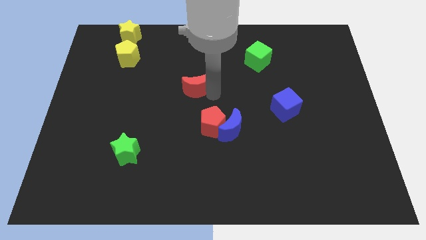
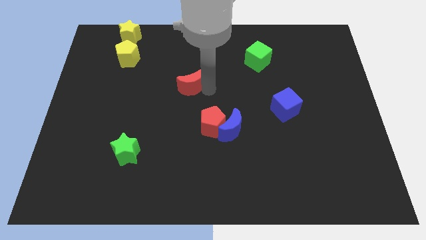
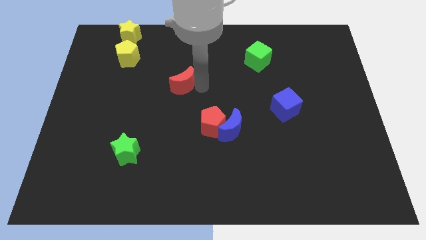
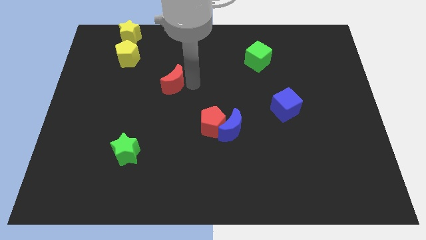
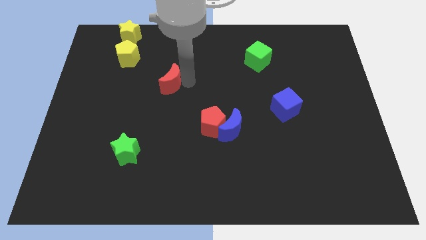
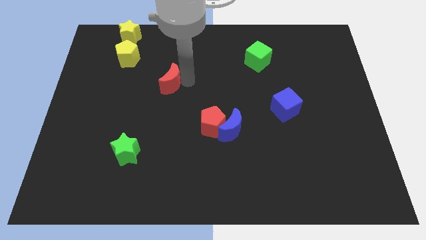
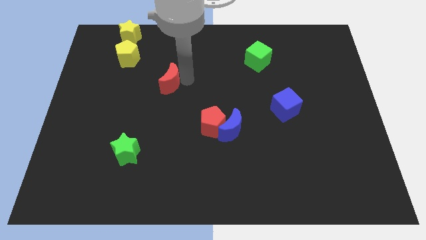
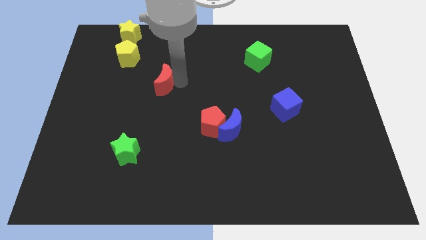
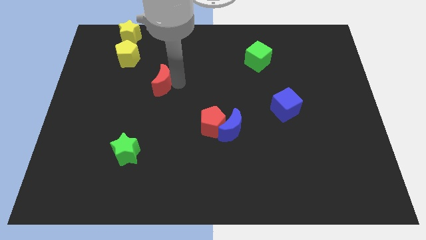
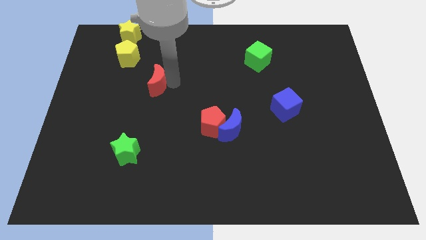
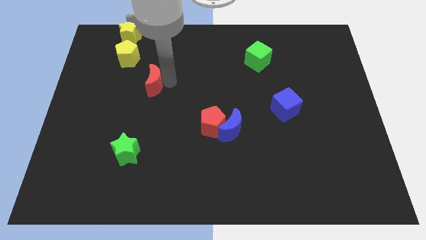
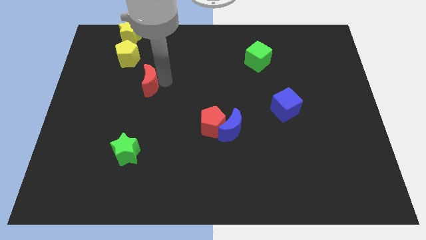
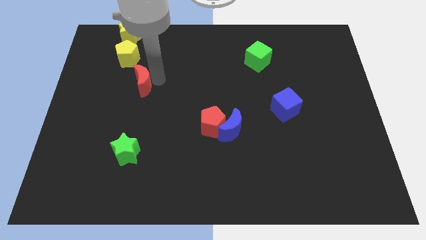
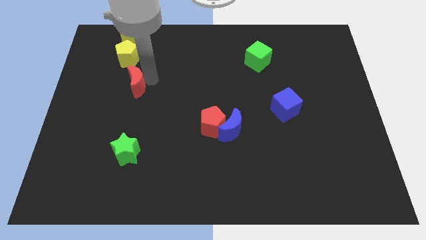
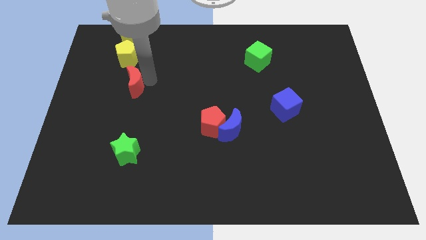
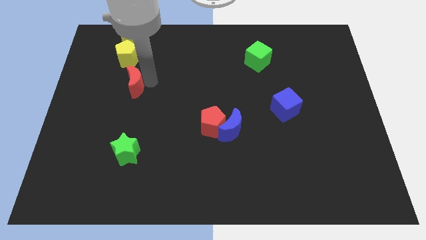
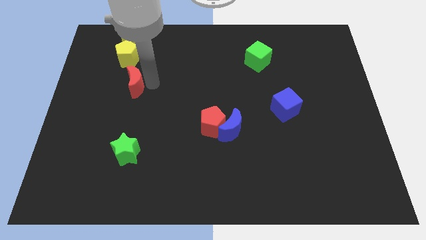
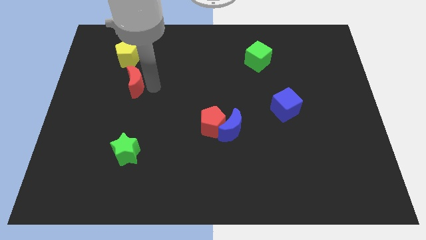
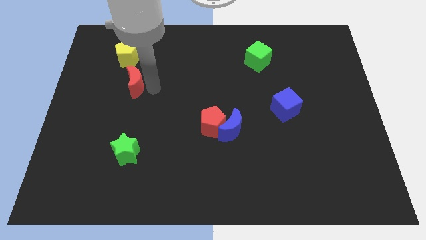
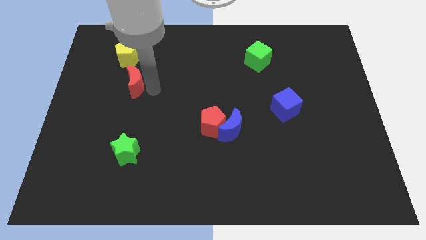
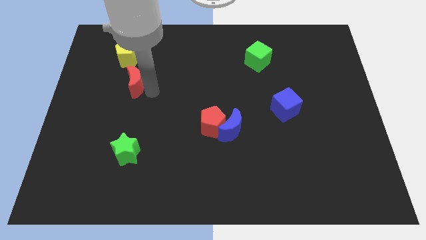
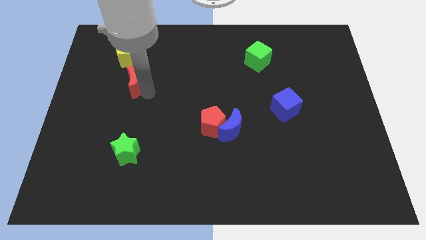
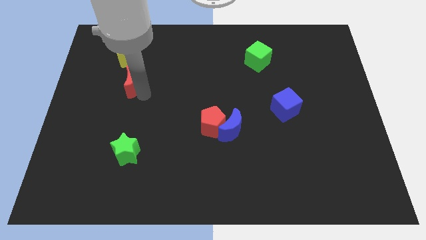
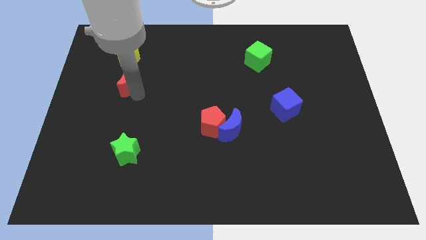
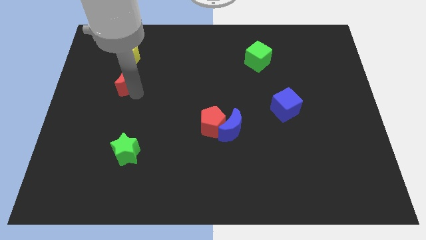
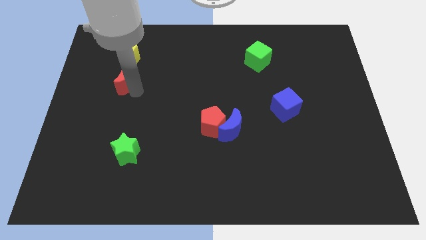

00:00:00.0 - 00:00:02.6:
place the red moon below the yellow pentagon

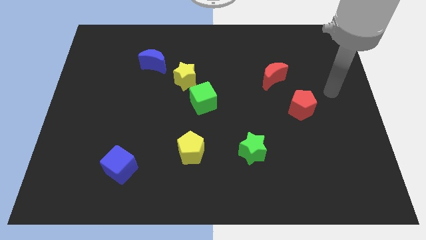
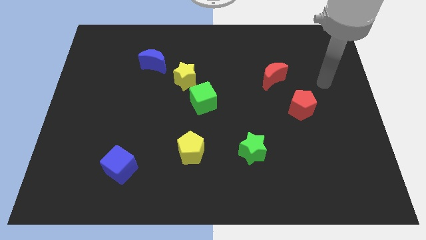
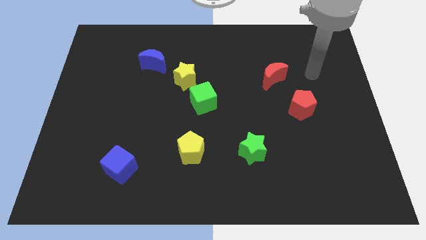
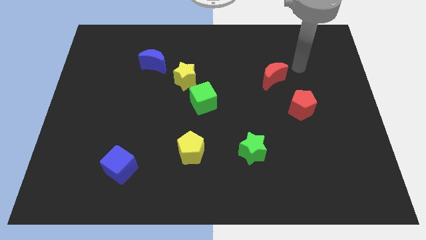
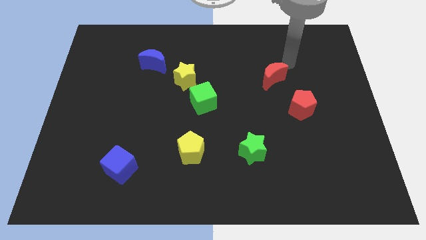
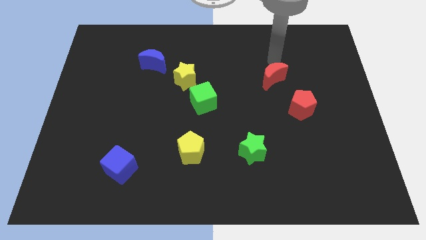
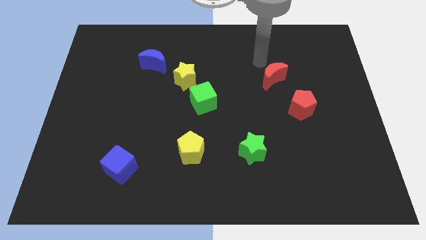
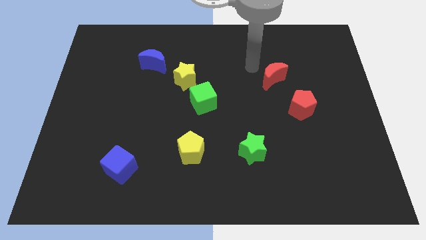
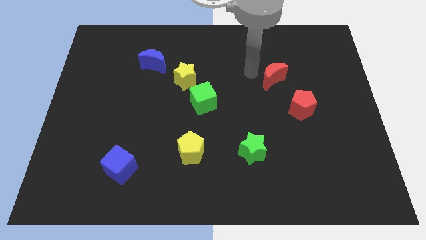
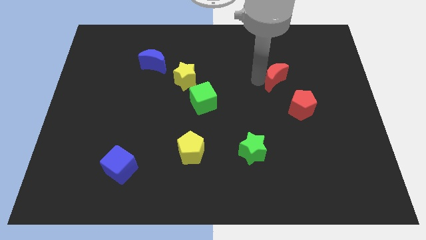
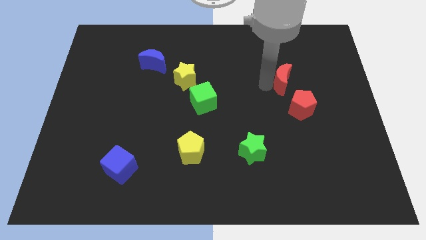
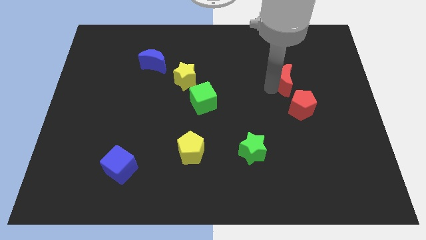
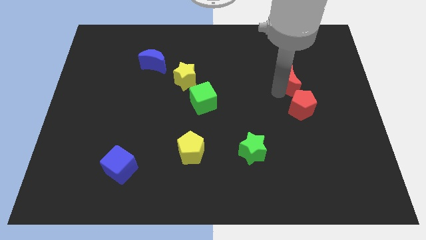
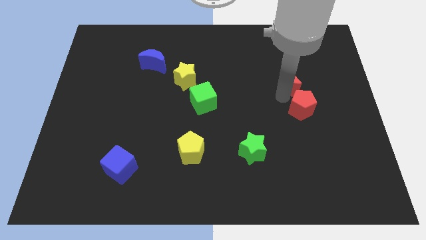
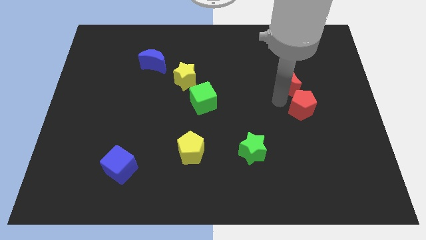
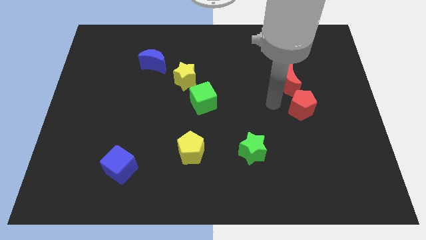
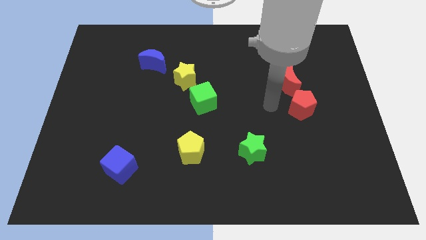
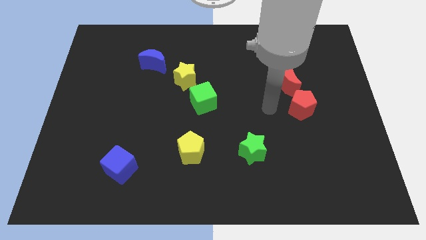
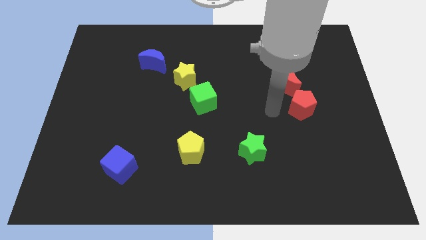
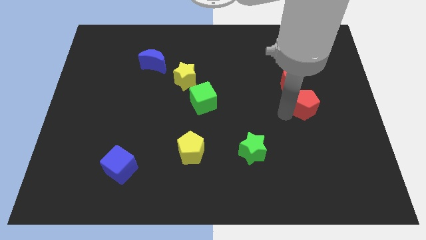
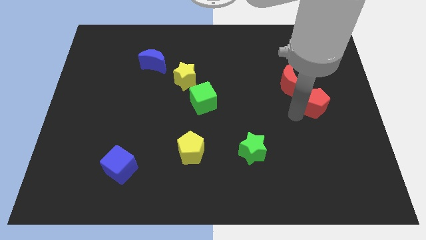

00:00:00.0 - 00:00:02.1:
place the red moon close to red penatgon

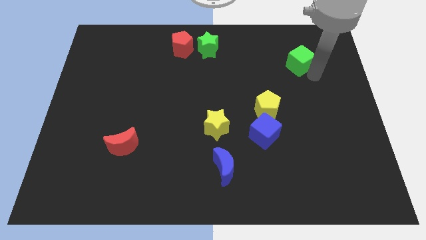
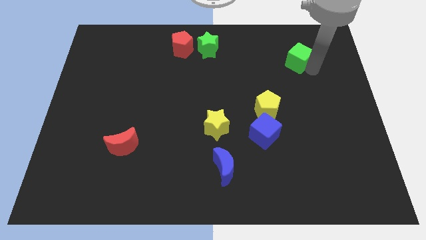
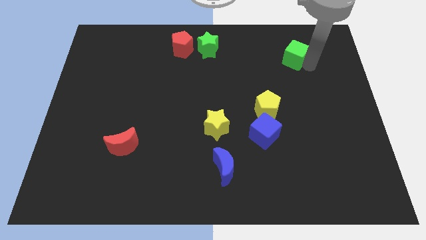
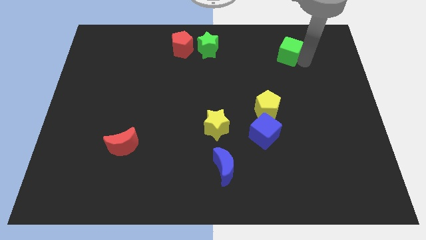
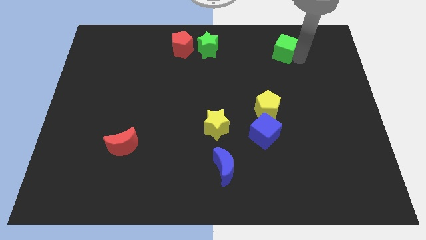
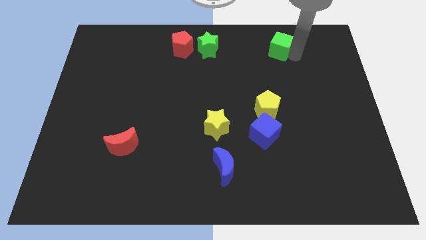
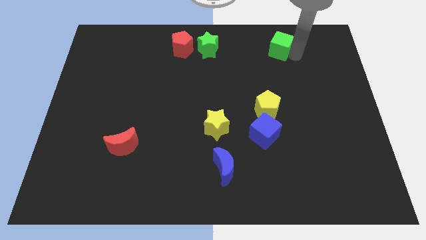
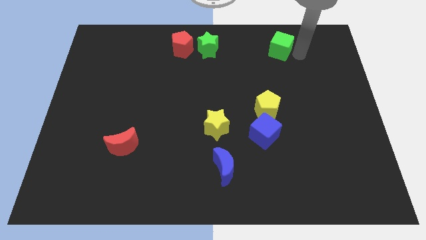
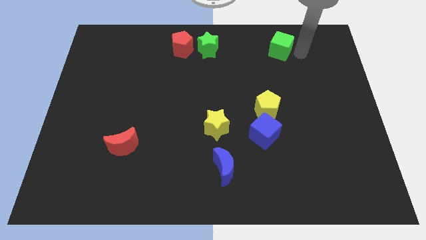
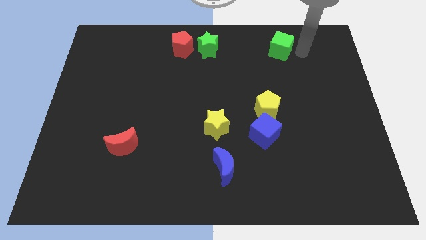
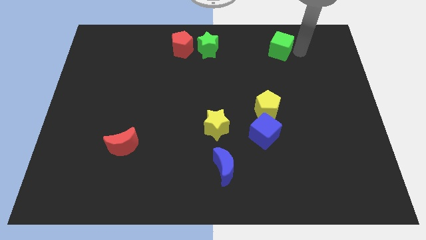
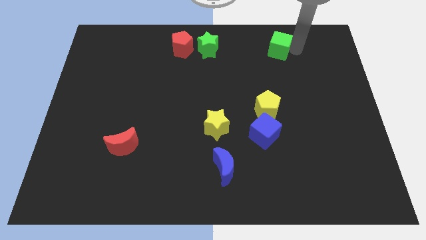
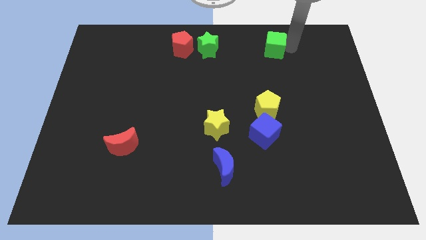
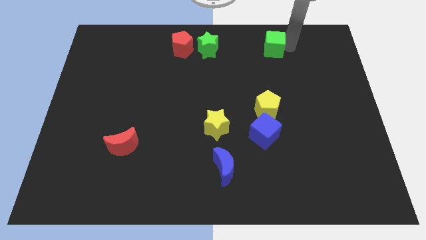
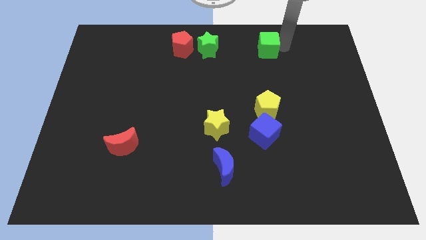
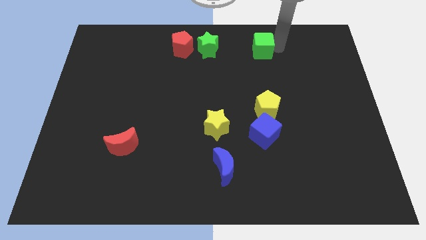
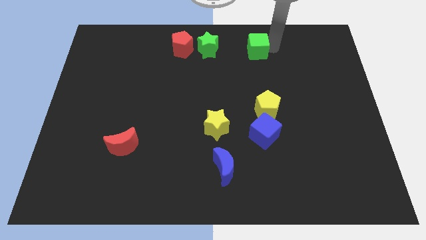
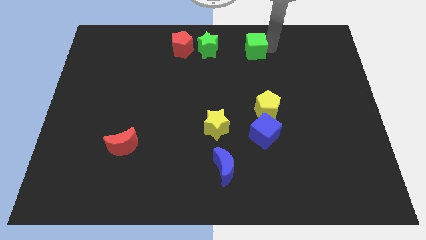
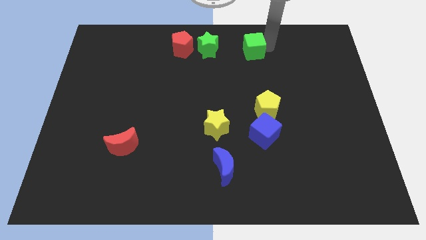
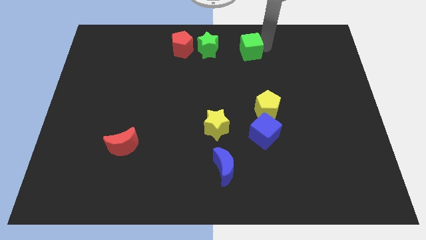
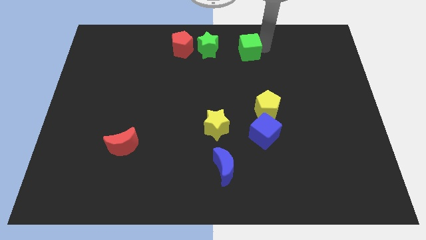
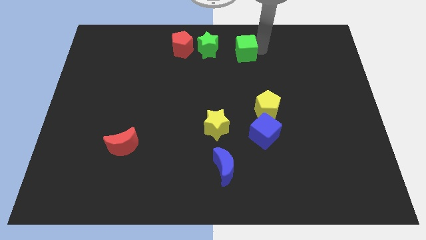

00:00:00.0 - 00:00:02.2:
move the green cube towards the green star

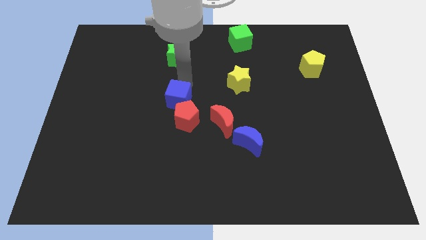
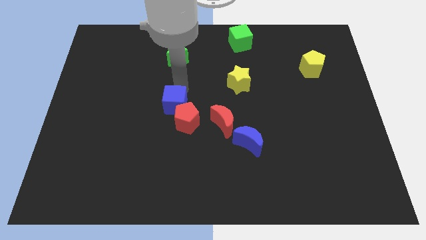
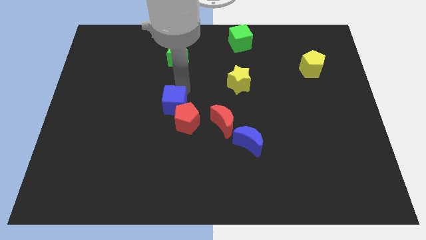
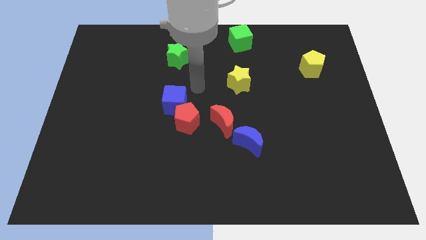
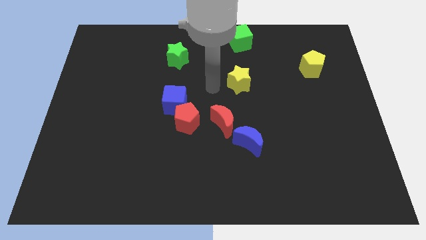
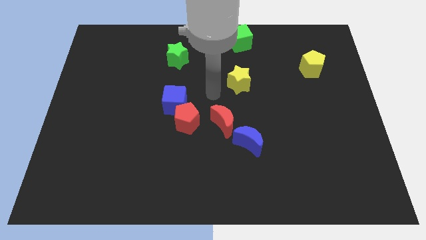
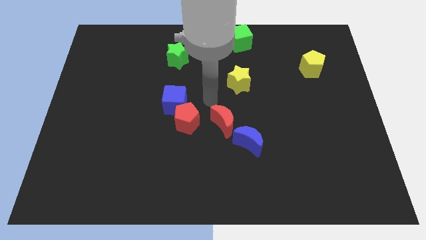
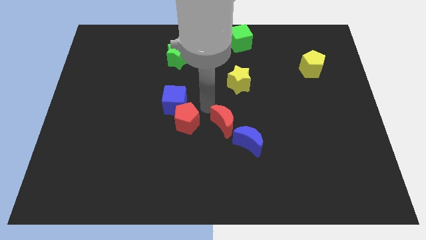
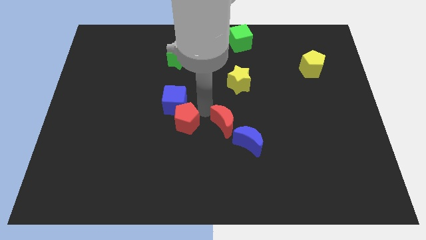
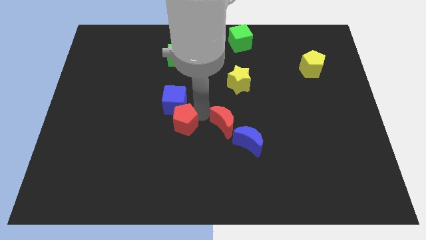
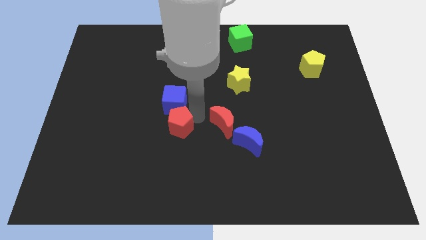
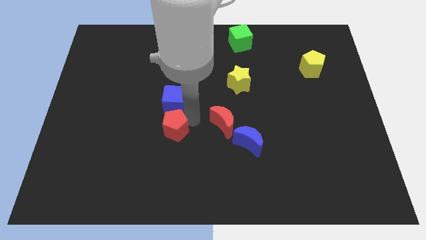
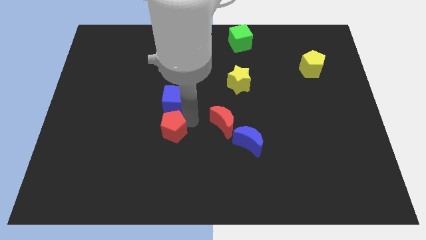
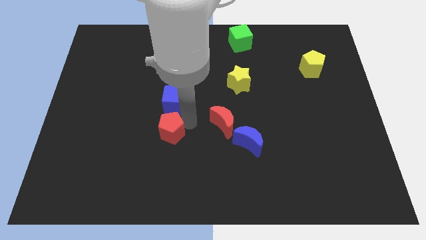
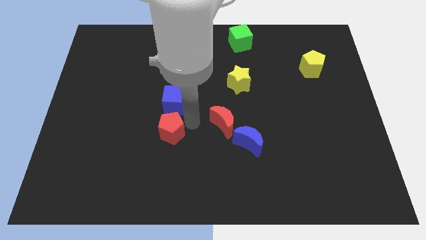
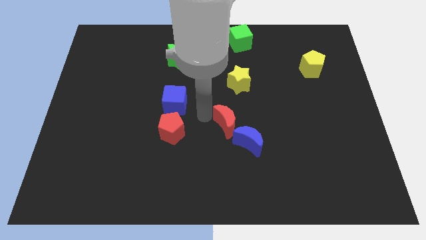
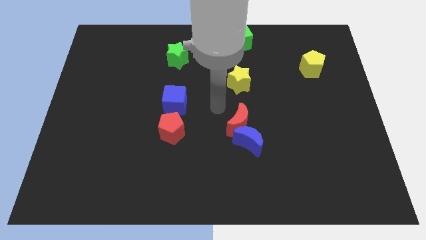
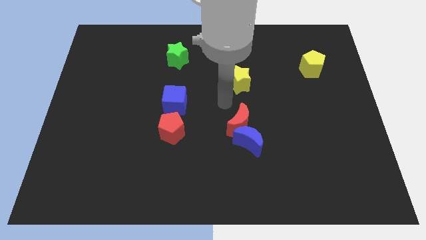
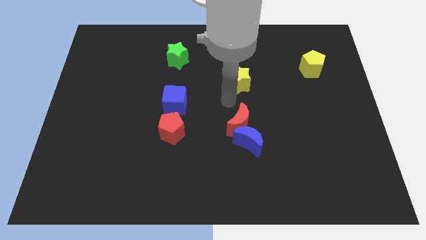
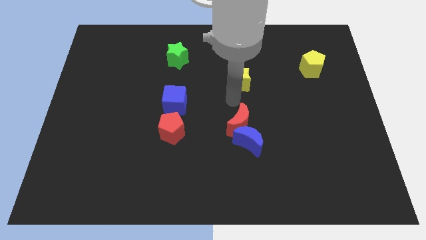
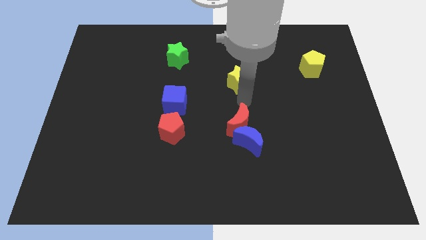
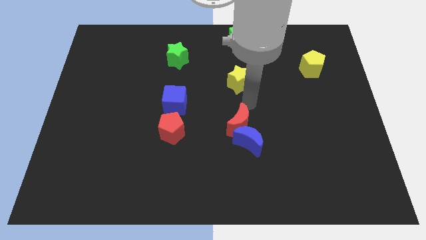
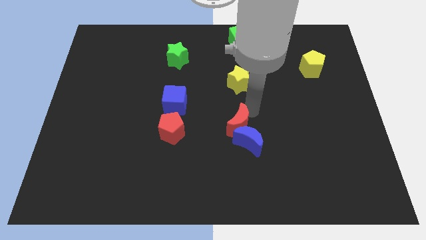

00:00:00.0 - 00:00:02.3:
place red penatgon below blue cube
